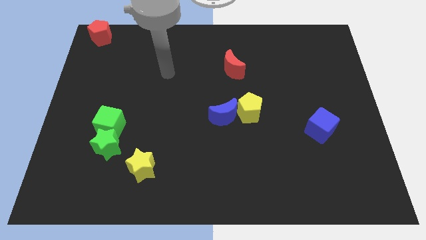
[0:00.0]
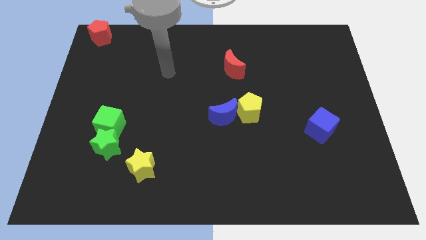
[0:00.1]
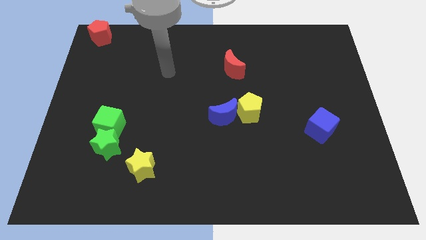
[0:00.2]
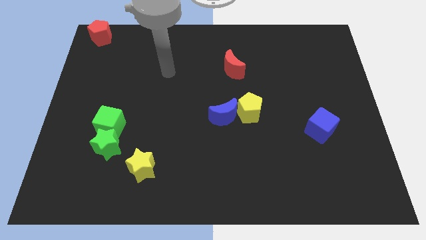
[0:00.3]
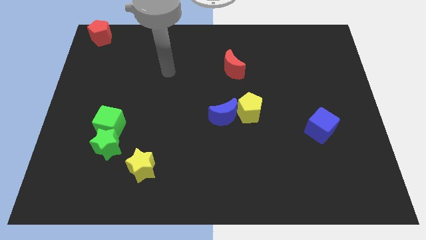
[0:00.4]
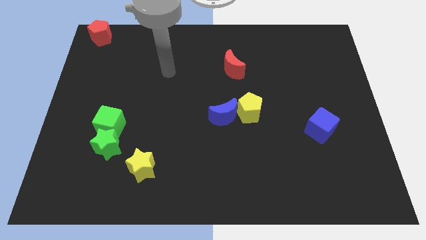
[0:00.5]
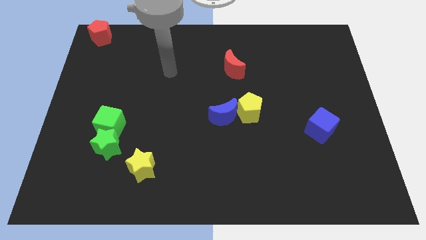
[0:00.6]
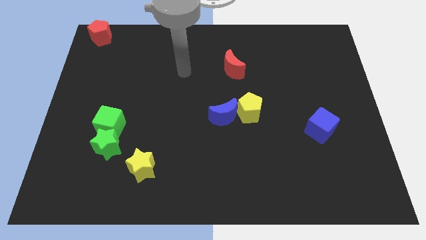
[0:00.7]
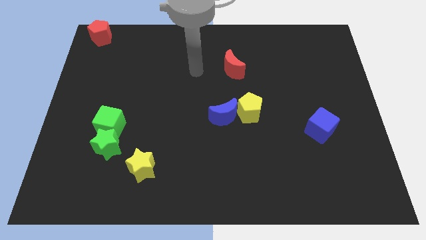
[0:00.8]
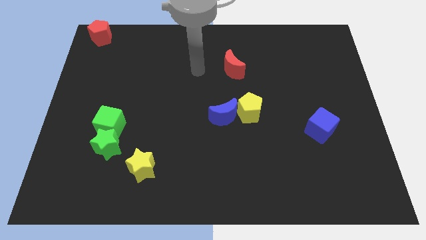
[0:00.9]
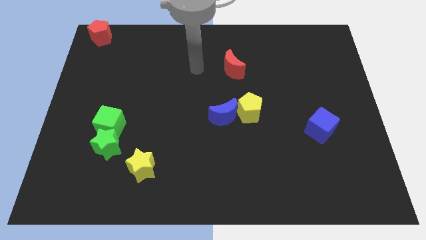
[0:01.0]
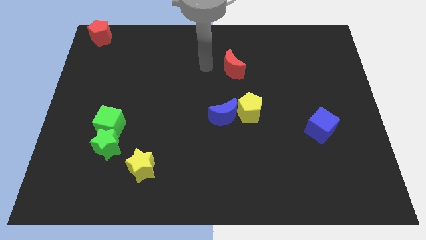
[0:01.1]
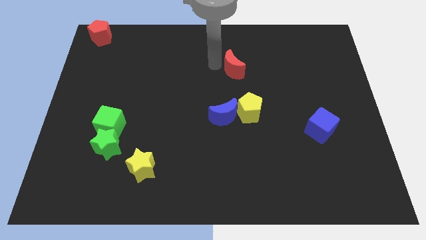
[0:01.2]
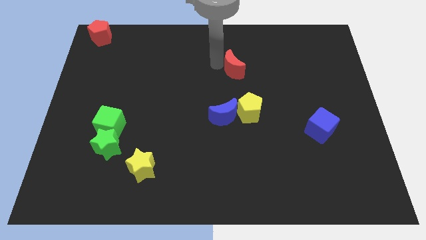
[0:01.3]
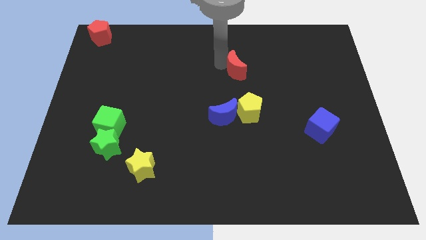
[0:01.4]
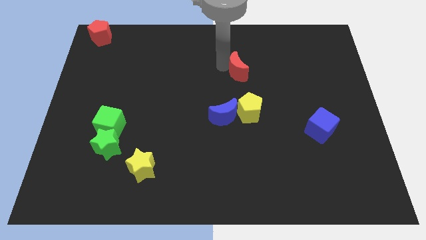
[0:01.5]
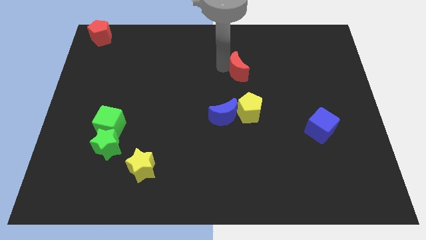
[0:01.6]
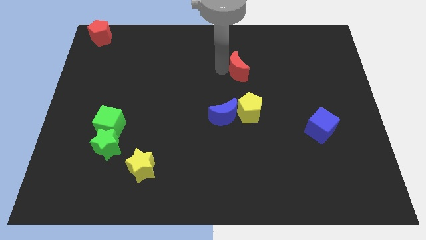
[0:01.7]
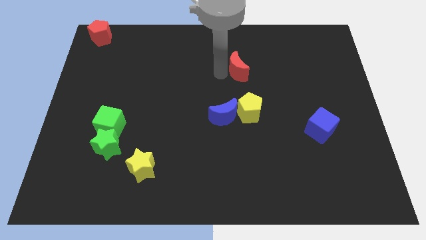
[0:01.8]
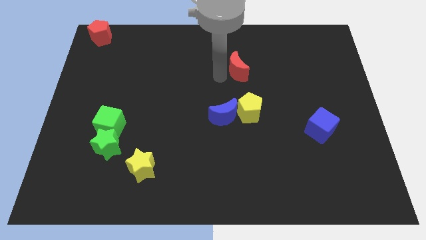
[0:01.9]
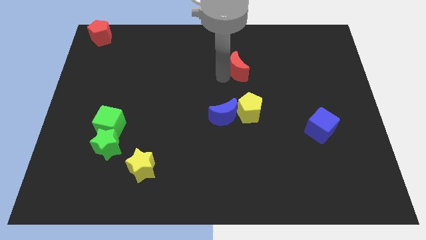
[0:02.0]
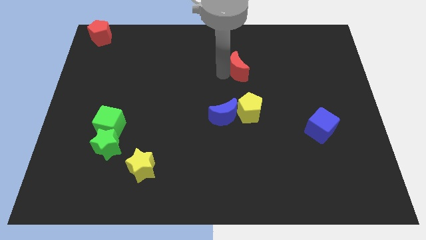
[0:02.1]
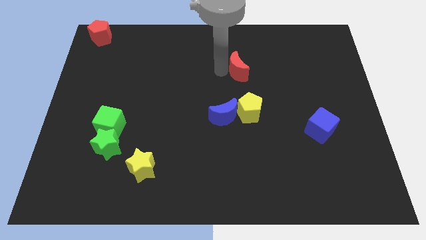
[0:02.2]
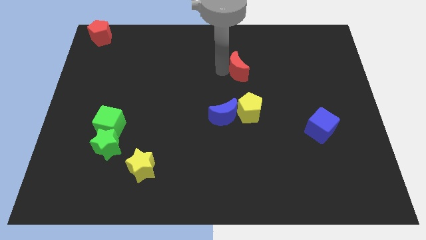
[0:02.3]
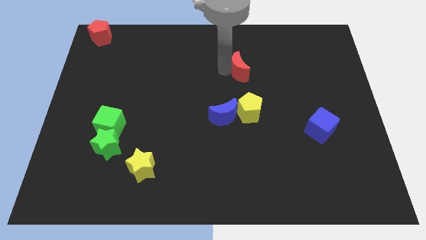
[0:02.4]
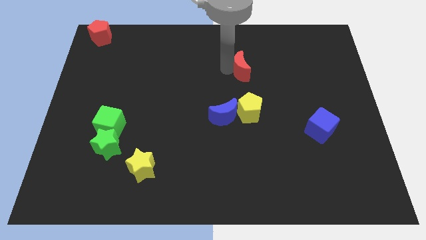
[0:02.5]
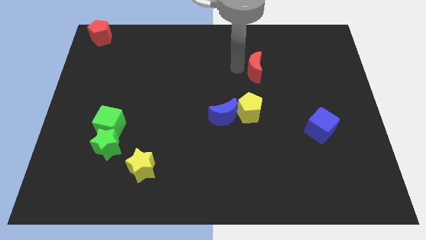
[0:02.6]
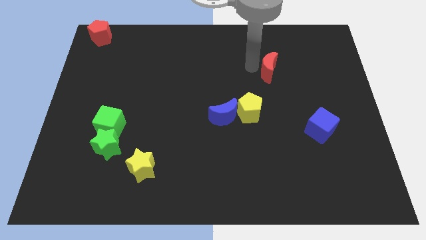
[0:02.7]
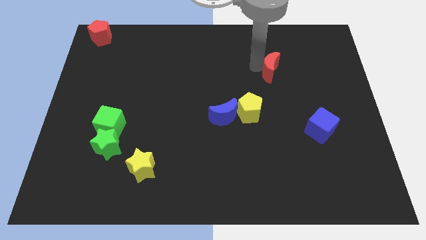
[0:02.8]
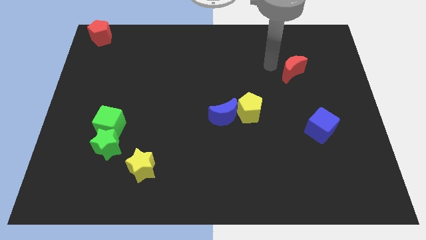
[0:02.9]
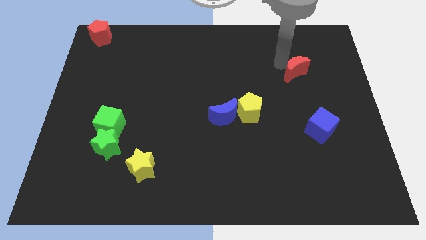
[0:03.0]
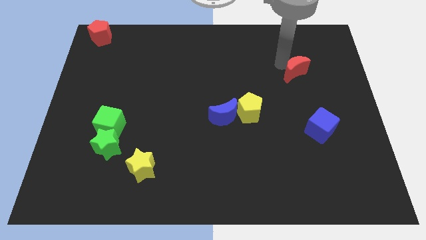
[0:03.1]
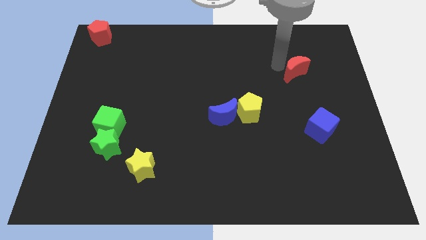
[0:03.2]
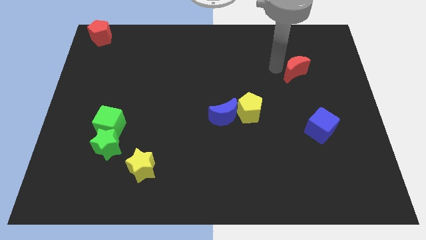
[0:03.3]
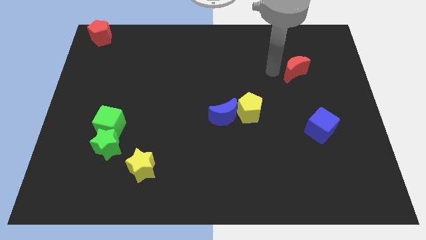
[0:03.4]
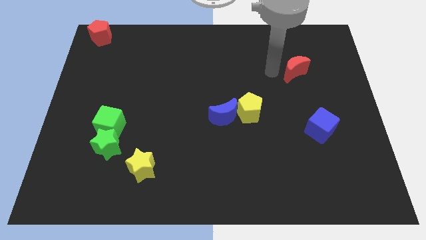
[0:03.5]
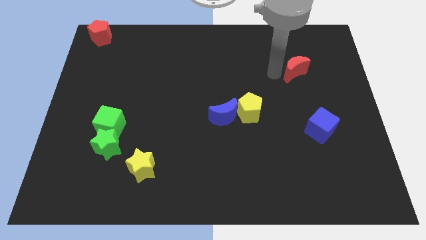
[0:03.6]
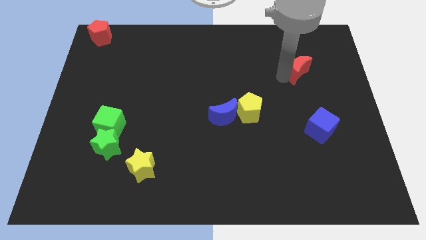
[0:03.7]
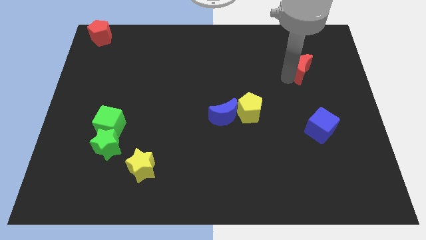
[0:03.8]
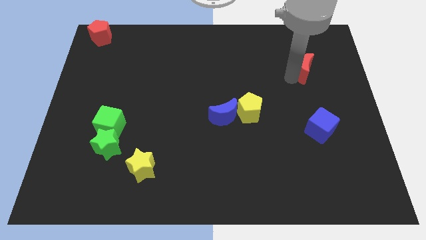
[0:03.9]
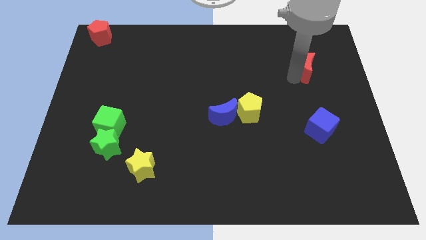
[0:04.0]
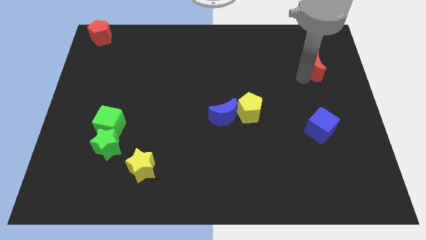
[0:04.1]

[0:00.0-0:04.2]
place the red moon above the blue cube

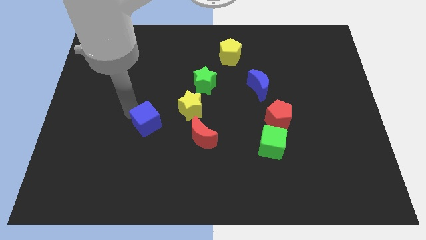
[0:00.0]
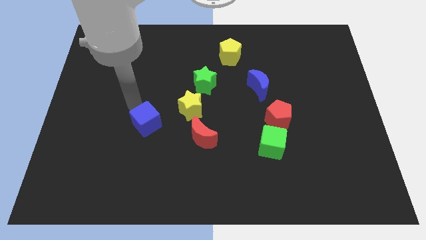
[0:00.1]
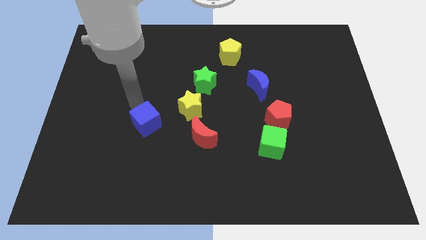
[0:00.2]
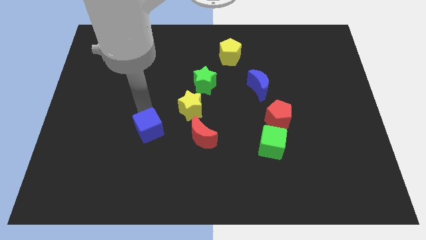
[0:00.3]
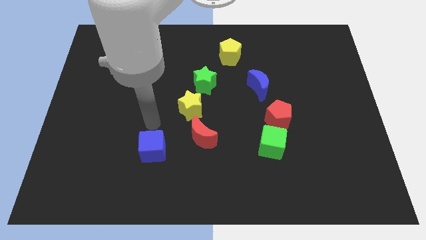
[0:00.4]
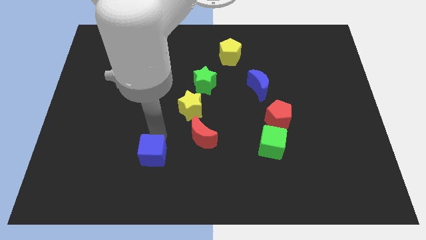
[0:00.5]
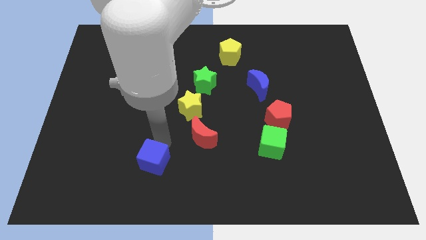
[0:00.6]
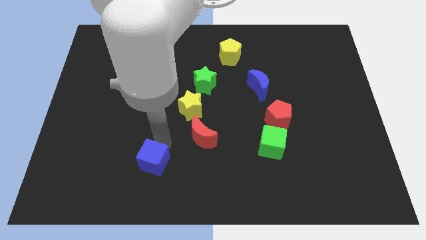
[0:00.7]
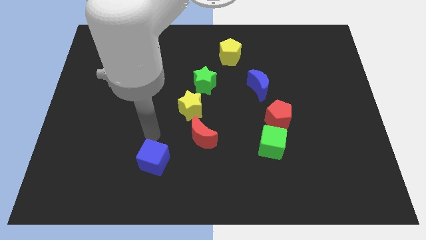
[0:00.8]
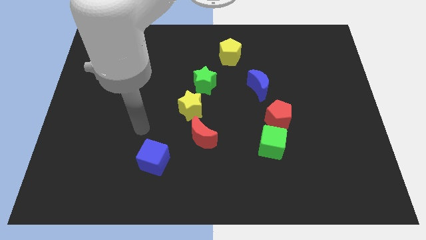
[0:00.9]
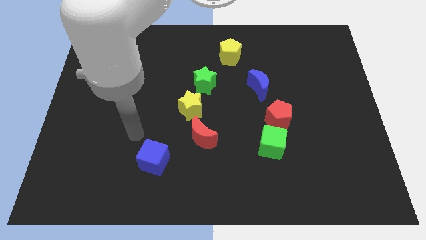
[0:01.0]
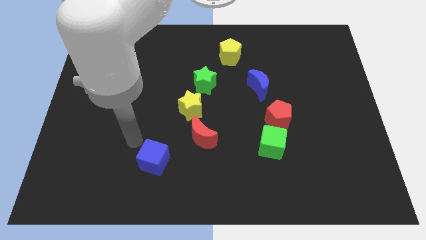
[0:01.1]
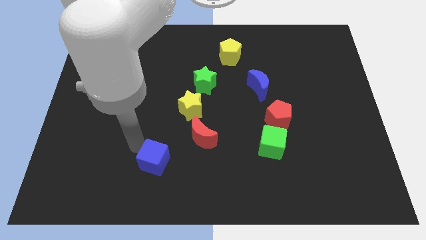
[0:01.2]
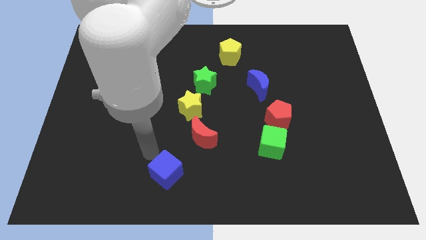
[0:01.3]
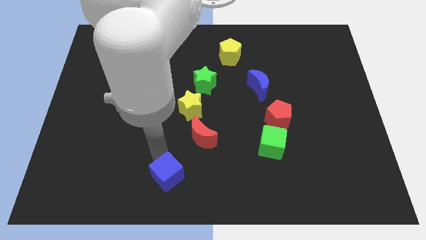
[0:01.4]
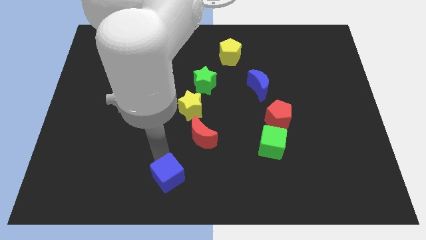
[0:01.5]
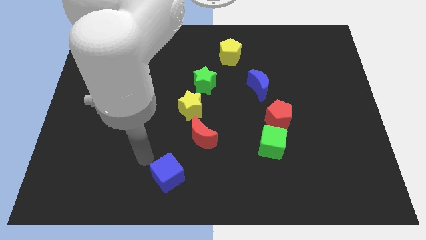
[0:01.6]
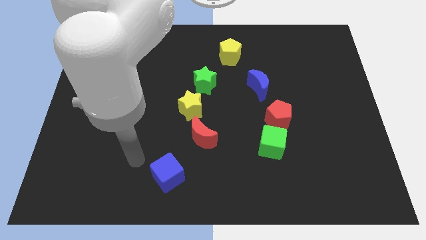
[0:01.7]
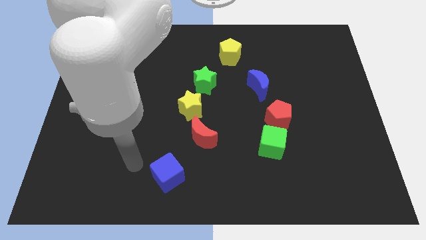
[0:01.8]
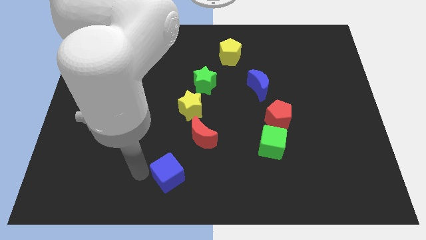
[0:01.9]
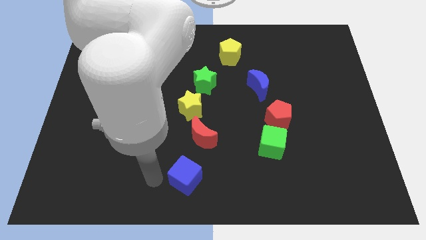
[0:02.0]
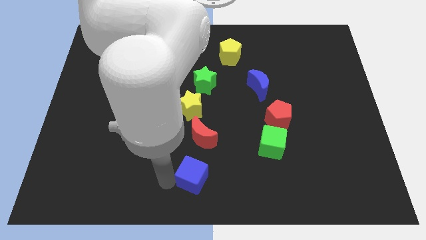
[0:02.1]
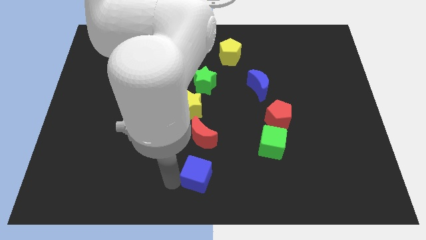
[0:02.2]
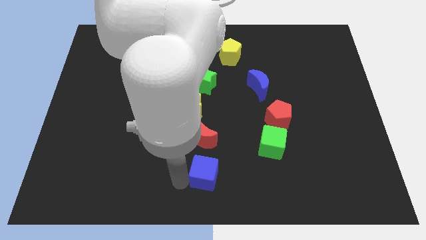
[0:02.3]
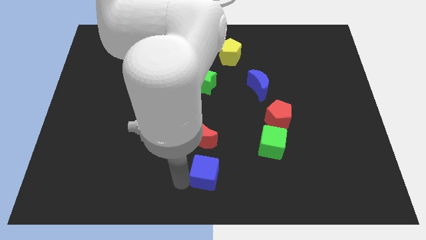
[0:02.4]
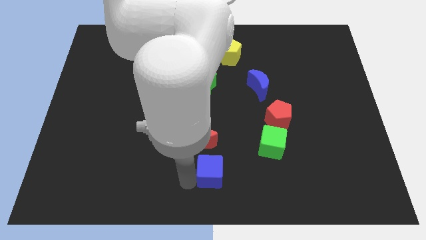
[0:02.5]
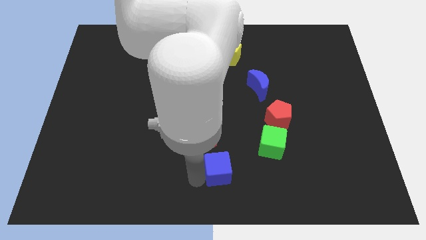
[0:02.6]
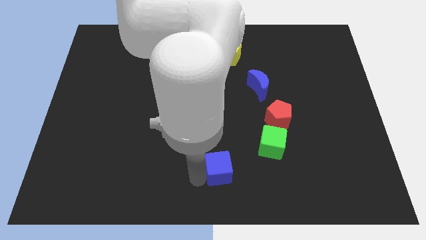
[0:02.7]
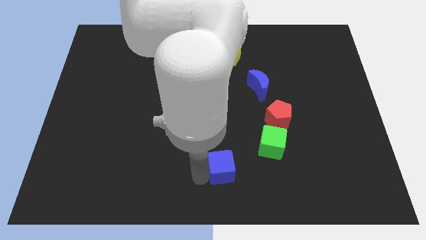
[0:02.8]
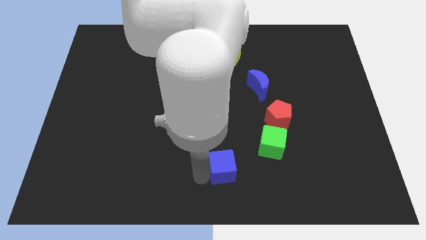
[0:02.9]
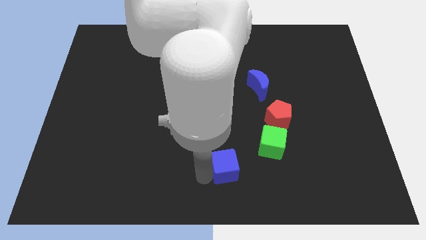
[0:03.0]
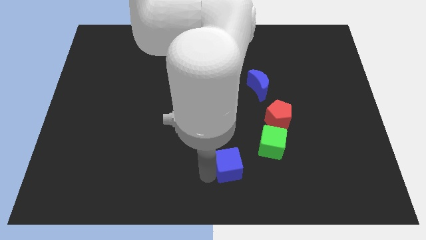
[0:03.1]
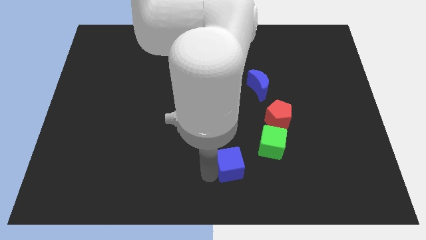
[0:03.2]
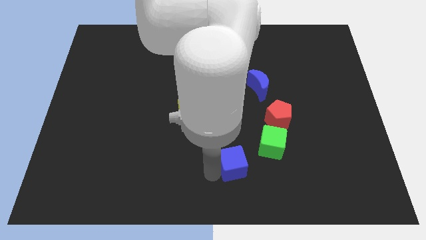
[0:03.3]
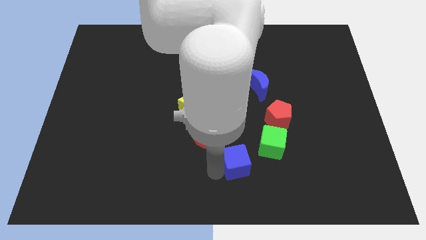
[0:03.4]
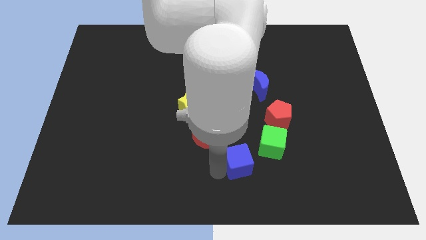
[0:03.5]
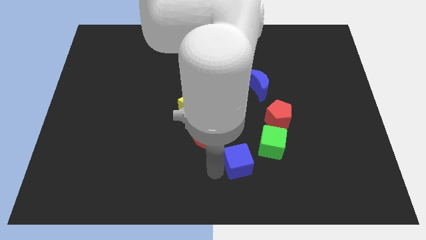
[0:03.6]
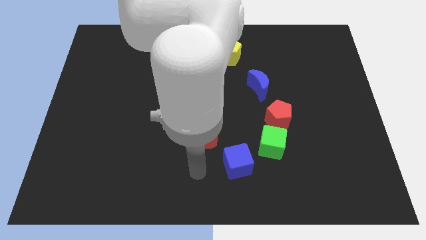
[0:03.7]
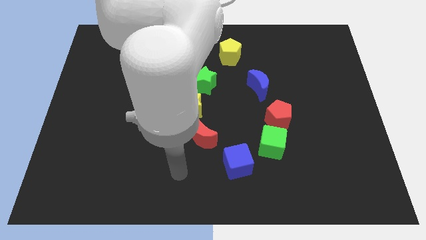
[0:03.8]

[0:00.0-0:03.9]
place the blue cube between the red moon and green cube

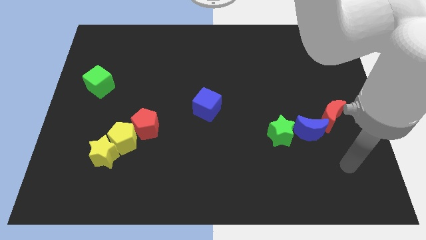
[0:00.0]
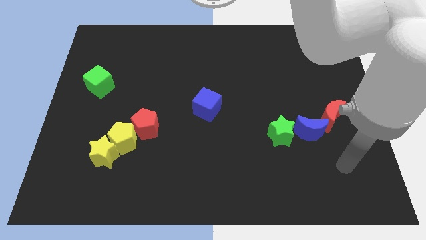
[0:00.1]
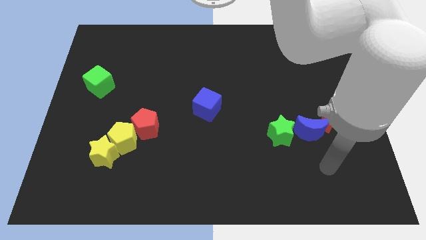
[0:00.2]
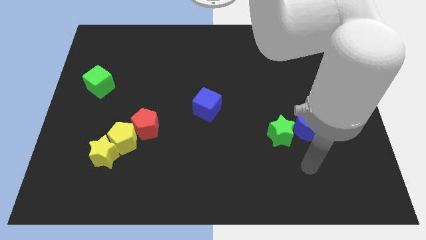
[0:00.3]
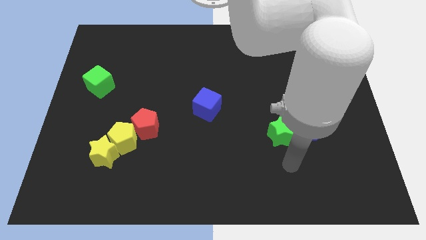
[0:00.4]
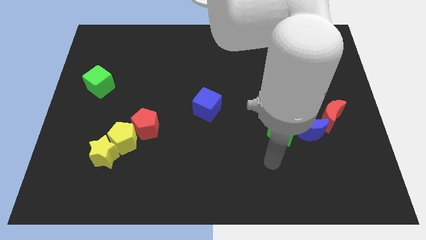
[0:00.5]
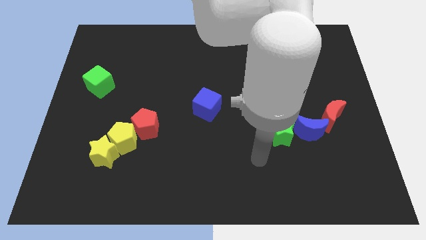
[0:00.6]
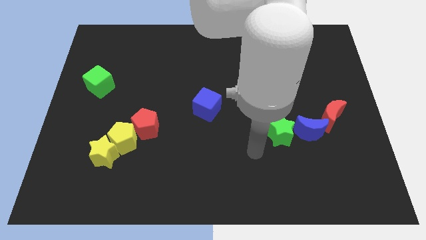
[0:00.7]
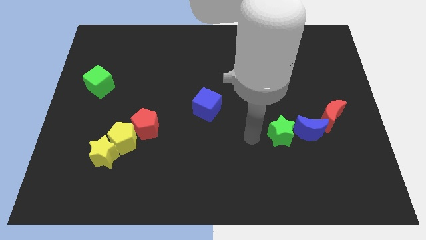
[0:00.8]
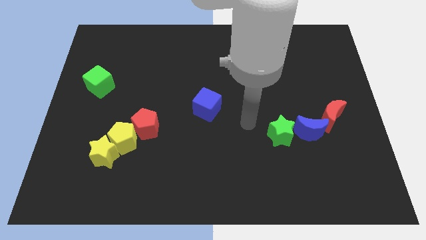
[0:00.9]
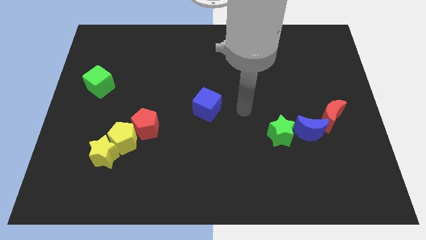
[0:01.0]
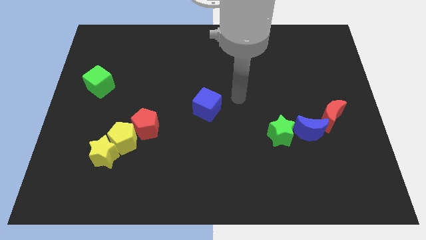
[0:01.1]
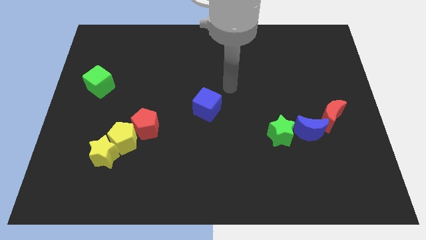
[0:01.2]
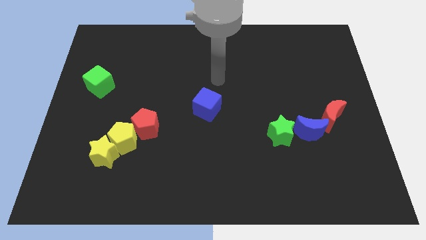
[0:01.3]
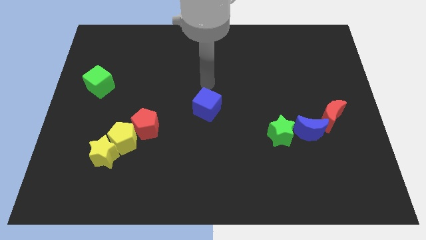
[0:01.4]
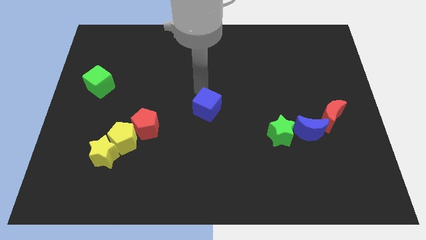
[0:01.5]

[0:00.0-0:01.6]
point your arm above the blue cube
